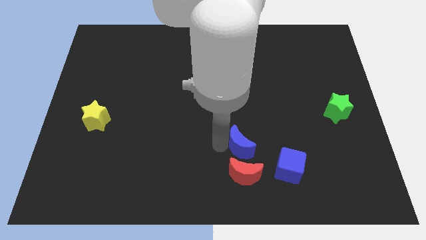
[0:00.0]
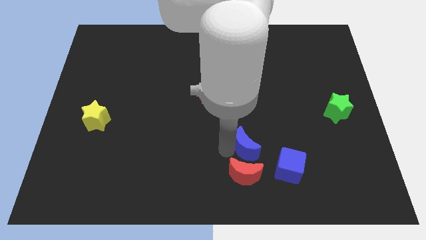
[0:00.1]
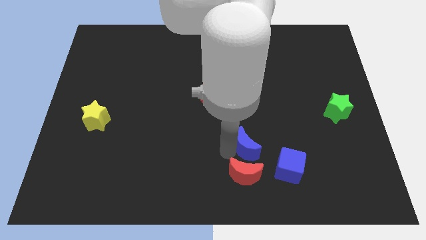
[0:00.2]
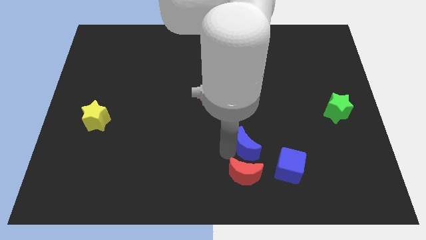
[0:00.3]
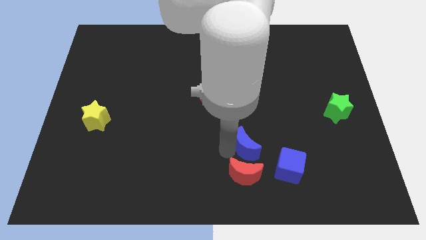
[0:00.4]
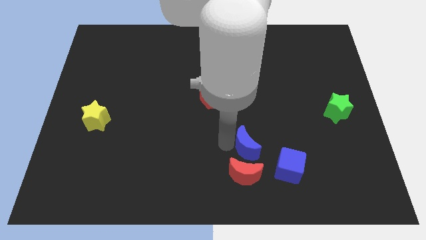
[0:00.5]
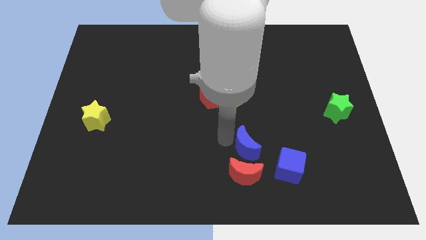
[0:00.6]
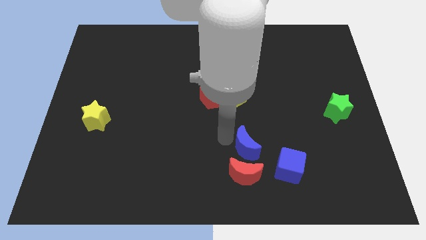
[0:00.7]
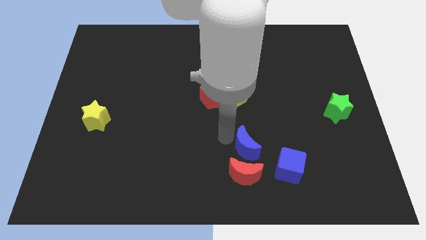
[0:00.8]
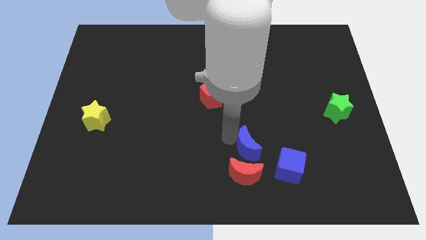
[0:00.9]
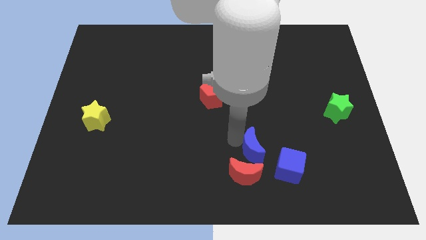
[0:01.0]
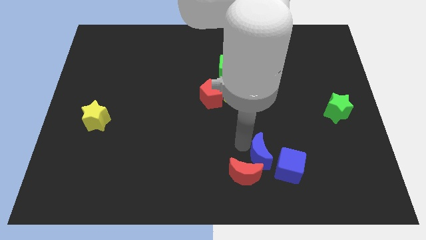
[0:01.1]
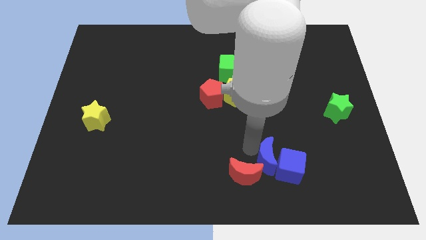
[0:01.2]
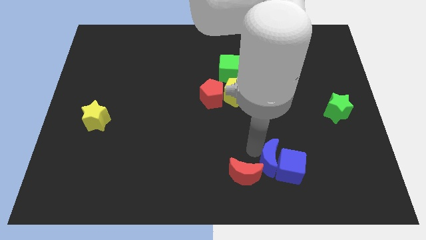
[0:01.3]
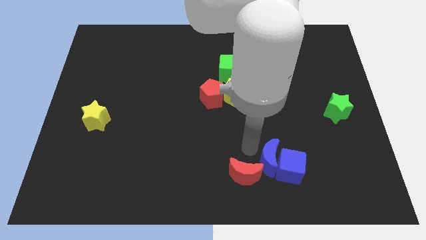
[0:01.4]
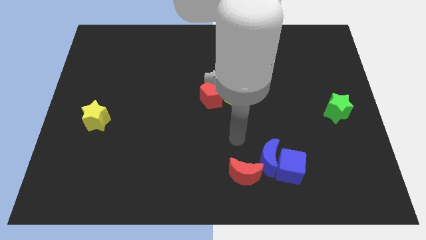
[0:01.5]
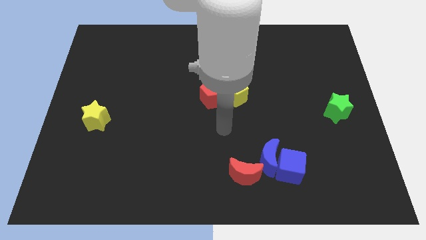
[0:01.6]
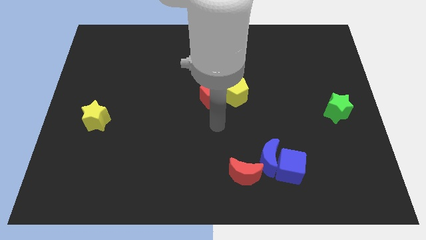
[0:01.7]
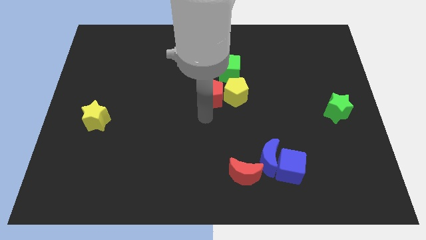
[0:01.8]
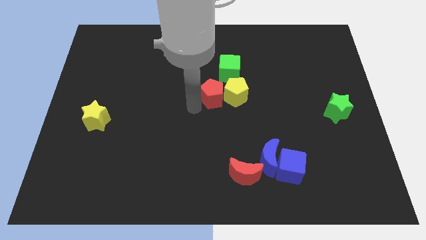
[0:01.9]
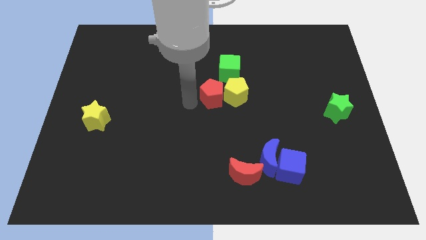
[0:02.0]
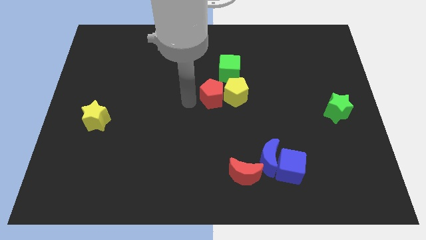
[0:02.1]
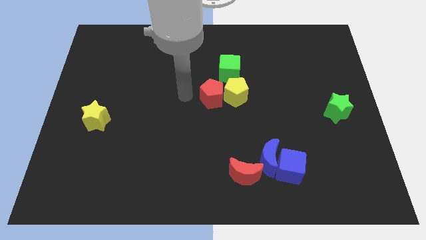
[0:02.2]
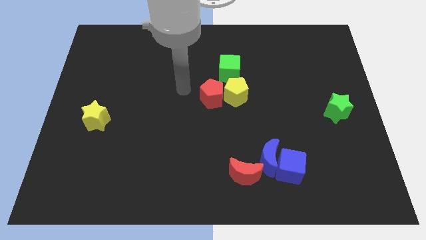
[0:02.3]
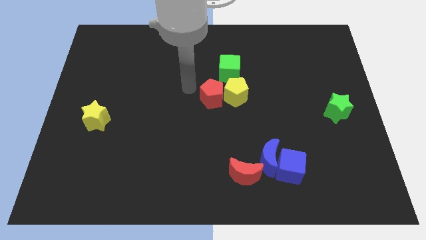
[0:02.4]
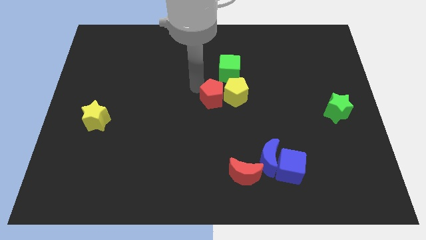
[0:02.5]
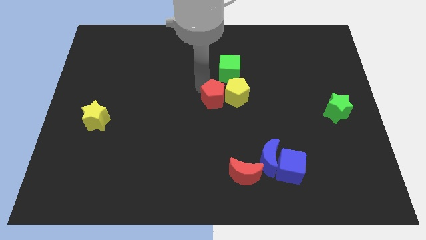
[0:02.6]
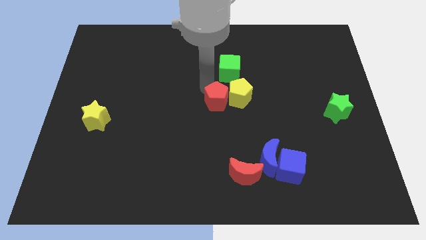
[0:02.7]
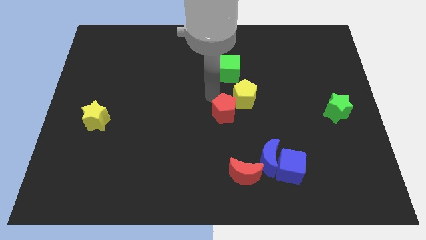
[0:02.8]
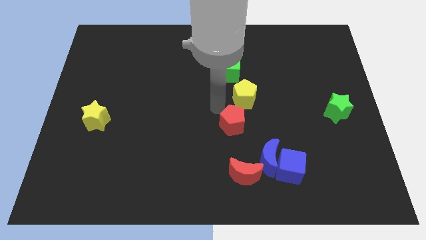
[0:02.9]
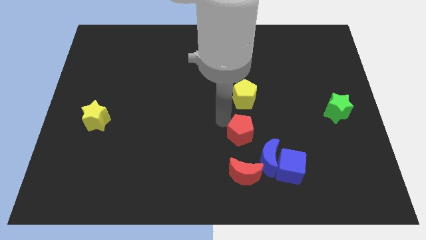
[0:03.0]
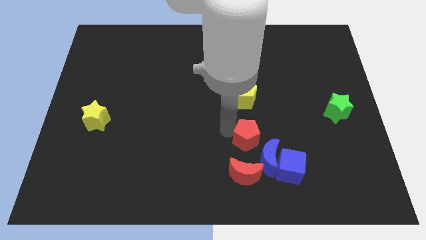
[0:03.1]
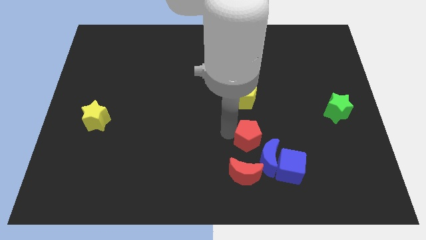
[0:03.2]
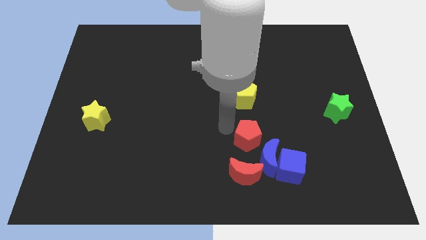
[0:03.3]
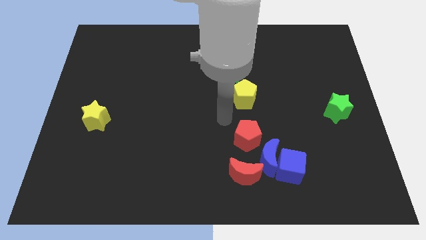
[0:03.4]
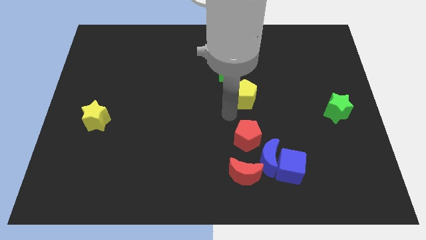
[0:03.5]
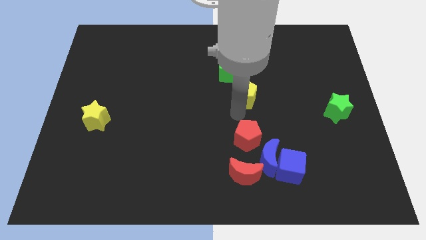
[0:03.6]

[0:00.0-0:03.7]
push the red pentagon in between red crescent and yellow pentagon

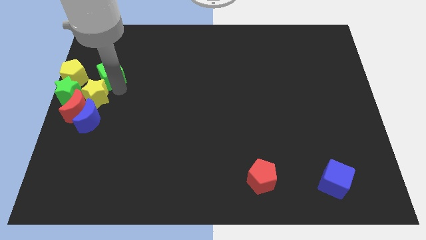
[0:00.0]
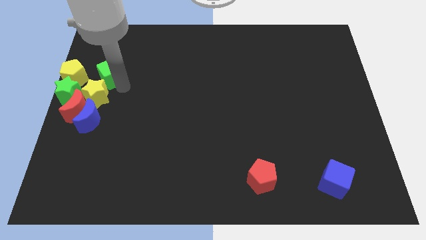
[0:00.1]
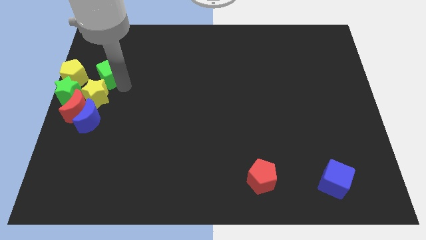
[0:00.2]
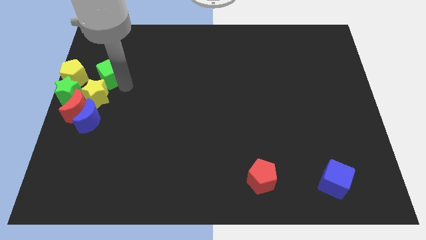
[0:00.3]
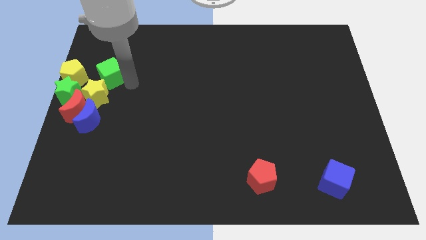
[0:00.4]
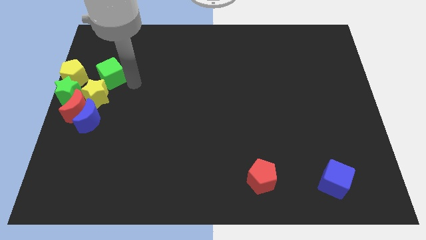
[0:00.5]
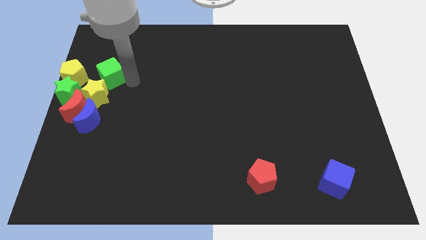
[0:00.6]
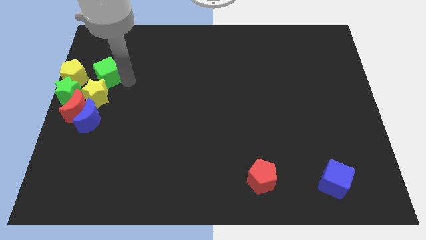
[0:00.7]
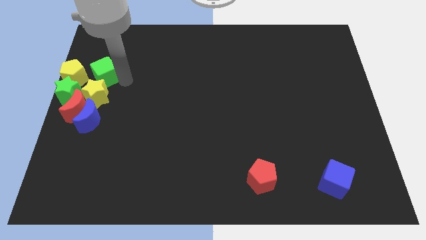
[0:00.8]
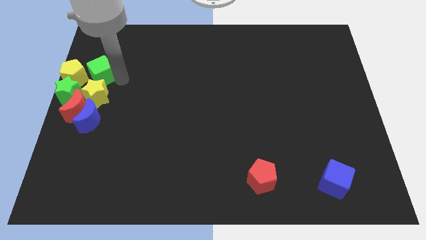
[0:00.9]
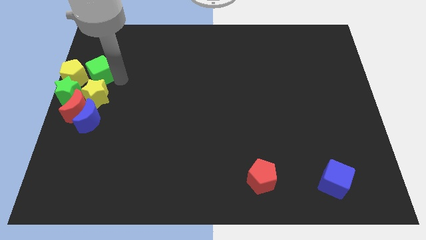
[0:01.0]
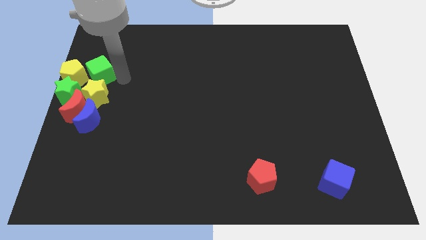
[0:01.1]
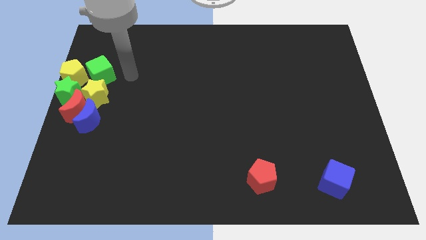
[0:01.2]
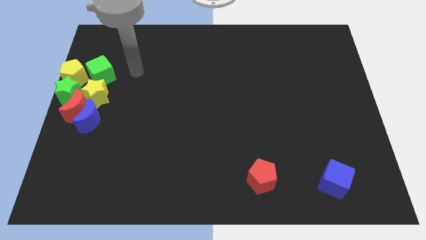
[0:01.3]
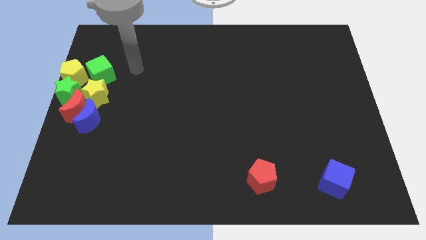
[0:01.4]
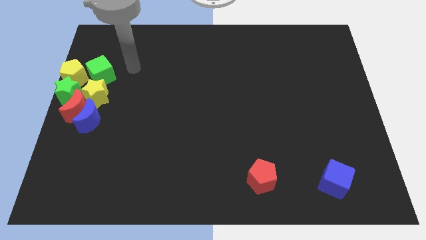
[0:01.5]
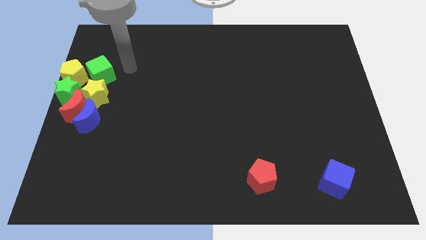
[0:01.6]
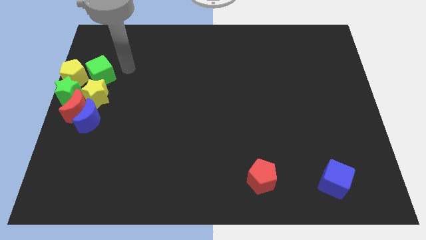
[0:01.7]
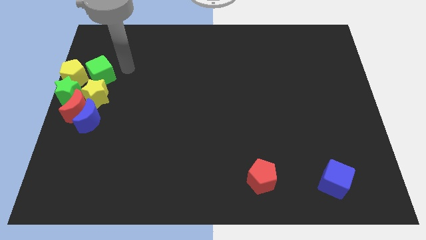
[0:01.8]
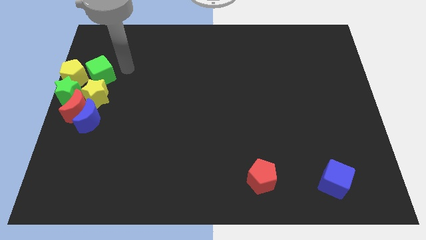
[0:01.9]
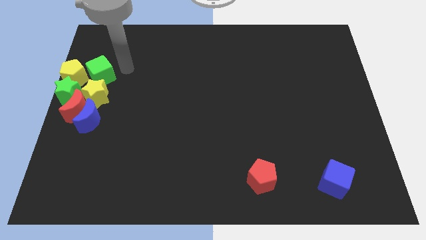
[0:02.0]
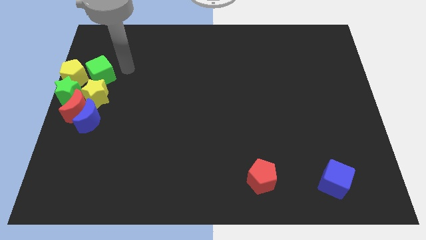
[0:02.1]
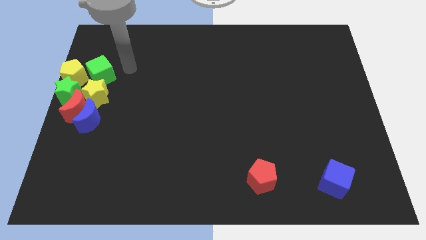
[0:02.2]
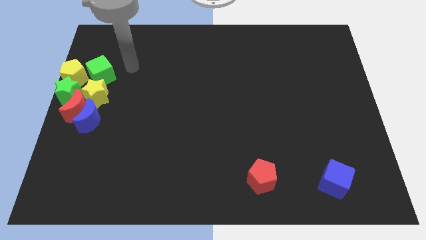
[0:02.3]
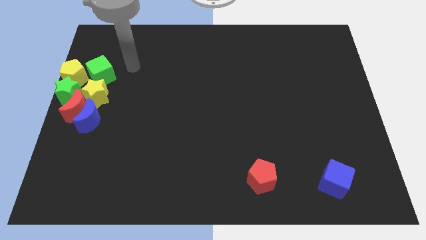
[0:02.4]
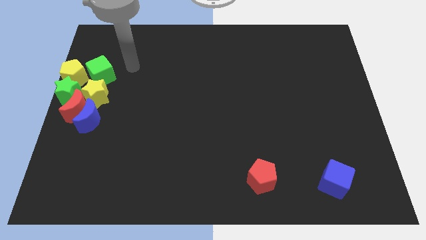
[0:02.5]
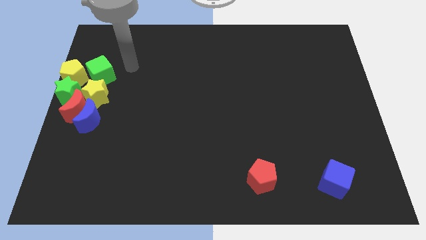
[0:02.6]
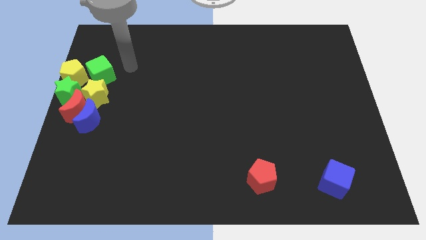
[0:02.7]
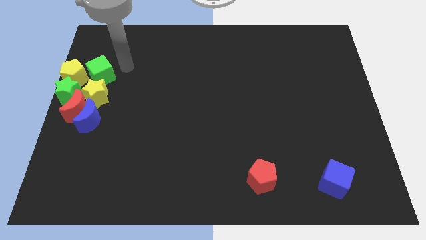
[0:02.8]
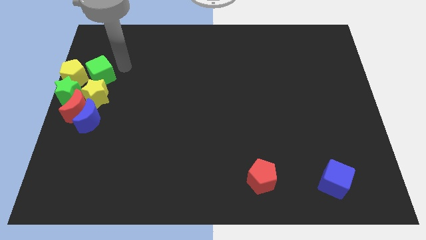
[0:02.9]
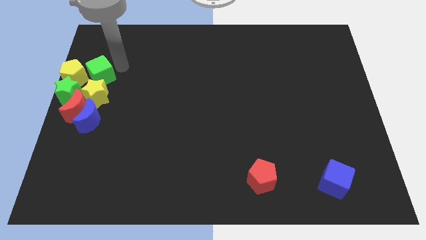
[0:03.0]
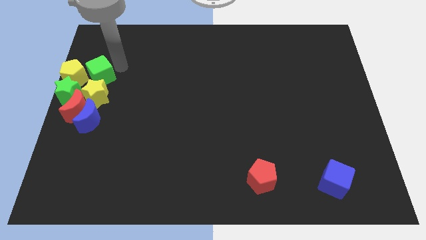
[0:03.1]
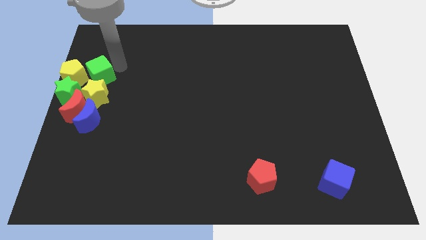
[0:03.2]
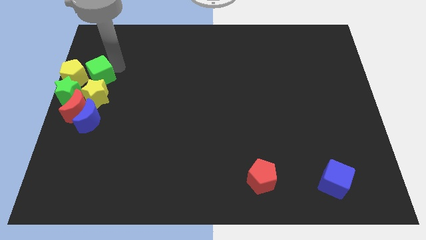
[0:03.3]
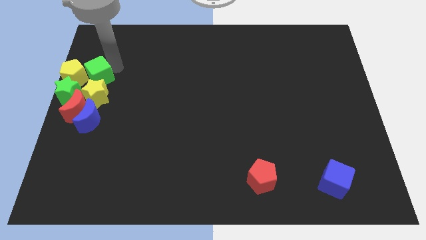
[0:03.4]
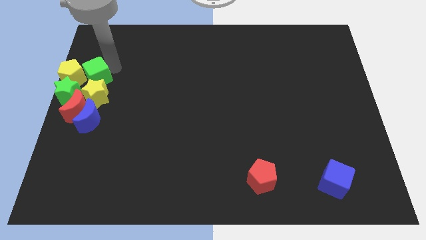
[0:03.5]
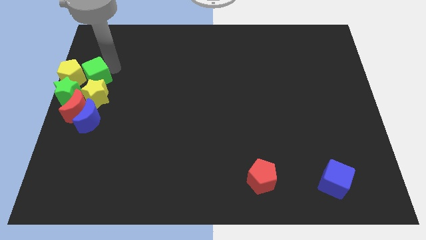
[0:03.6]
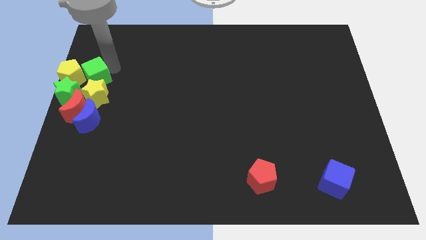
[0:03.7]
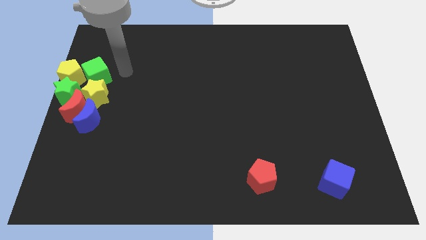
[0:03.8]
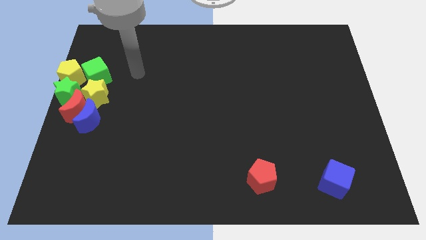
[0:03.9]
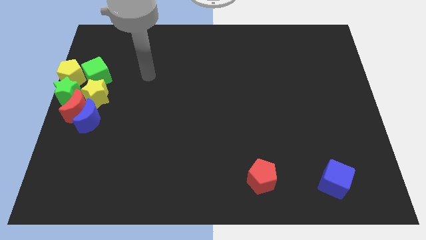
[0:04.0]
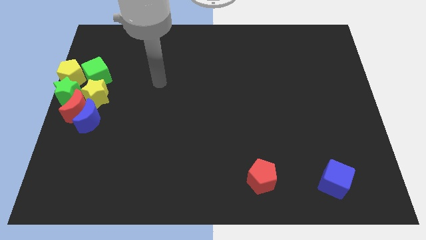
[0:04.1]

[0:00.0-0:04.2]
move green cube above yellow star

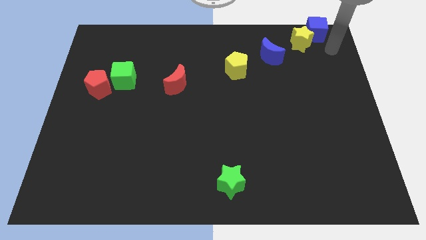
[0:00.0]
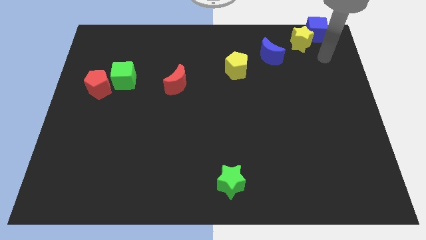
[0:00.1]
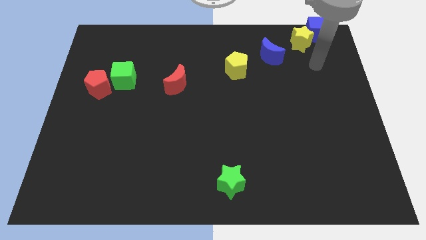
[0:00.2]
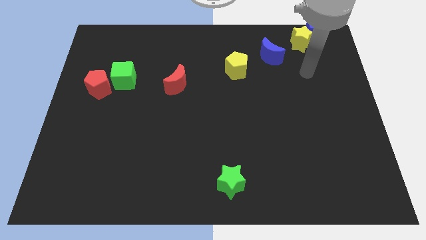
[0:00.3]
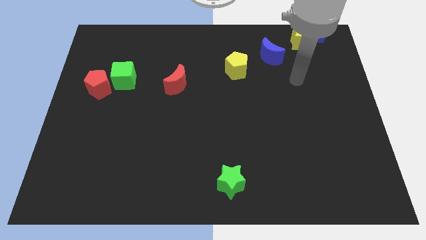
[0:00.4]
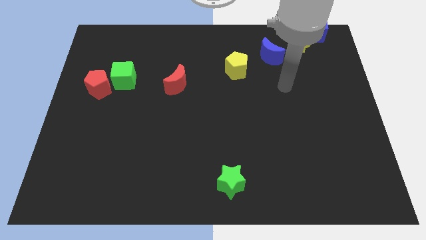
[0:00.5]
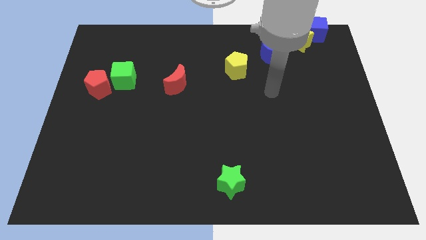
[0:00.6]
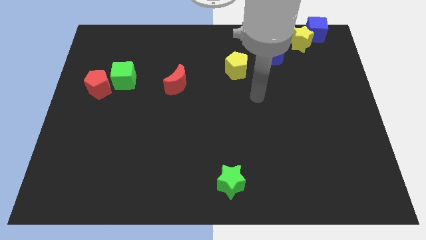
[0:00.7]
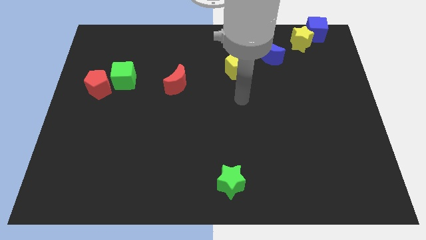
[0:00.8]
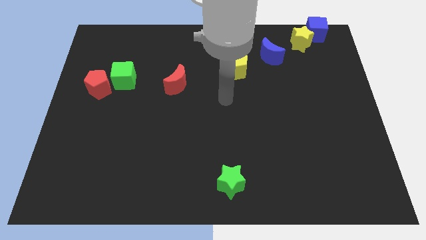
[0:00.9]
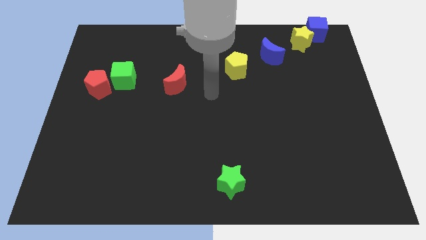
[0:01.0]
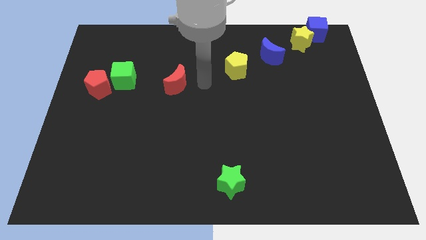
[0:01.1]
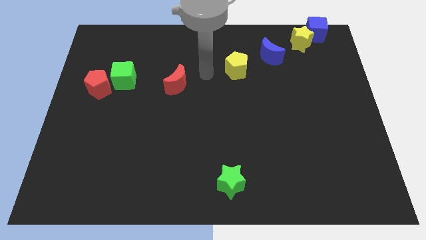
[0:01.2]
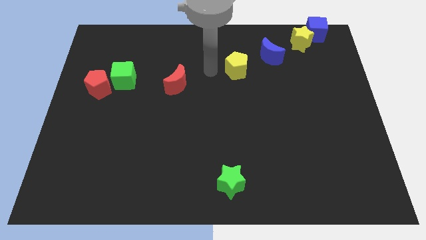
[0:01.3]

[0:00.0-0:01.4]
point the arm to the left of the yellow pentagon
